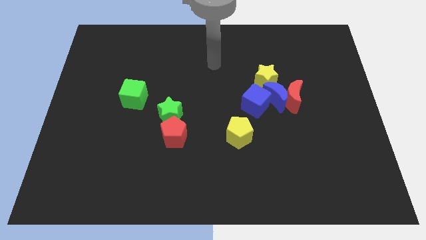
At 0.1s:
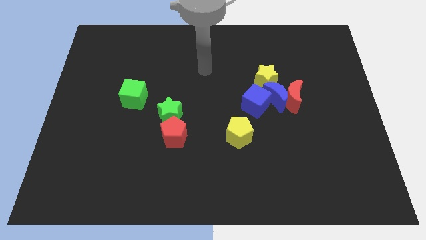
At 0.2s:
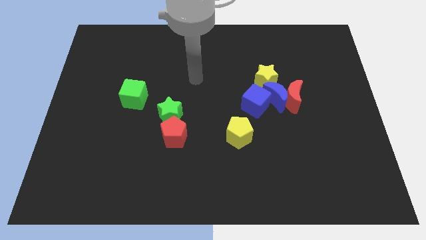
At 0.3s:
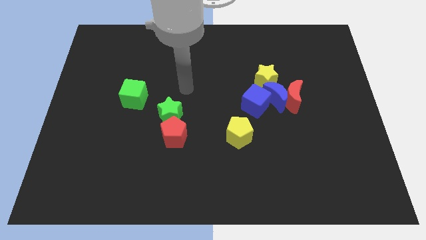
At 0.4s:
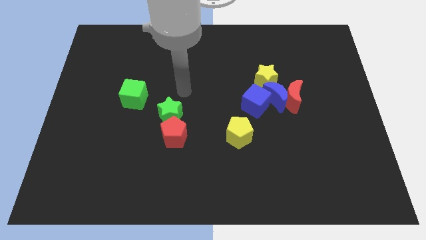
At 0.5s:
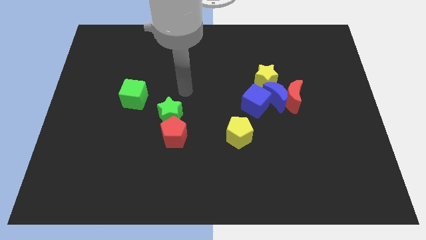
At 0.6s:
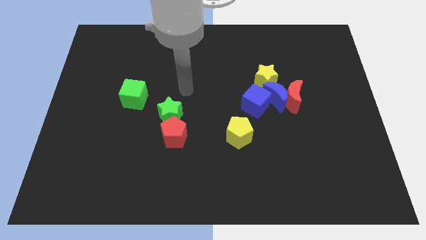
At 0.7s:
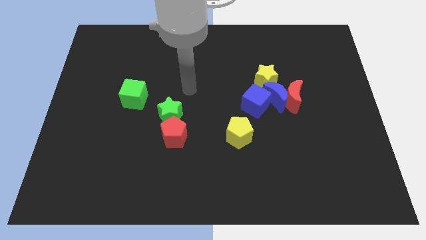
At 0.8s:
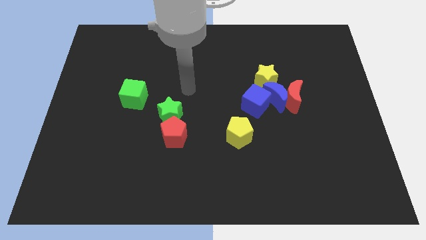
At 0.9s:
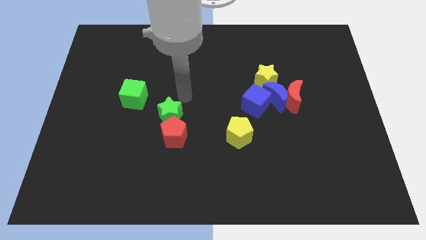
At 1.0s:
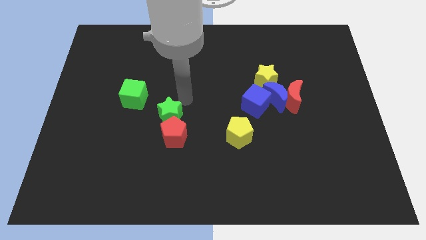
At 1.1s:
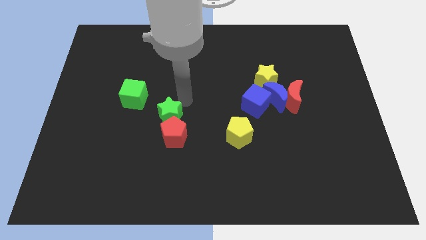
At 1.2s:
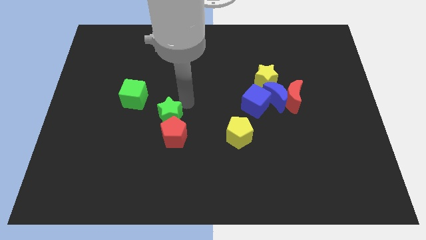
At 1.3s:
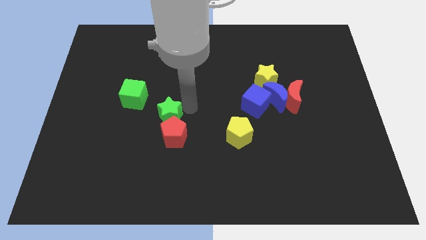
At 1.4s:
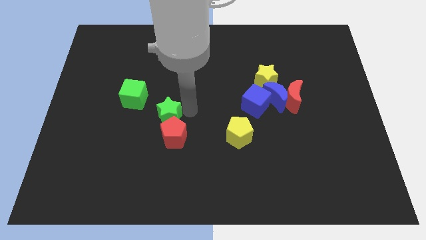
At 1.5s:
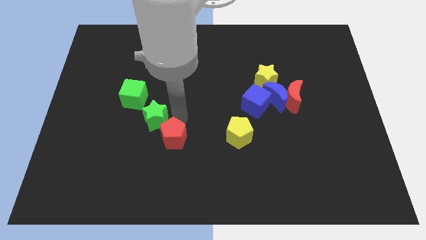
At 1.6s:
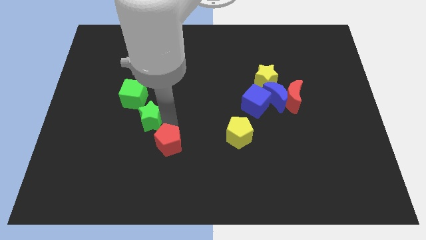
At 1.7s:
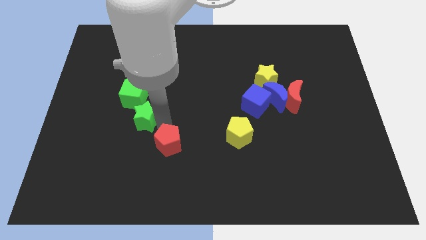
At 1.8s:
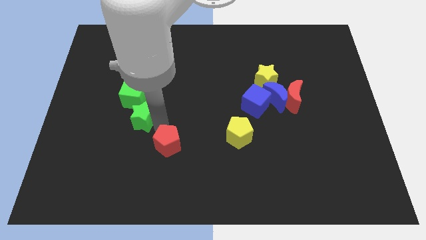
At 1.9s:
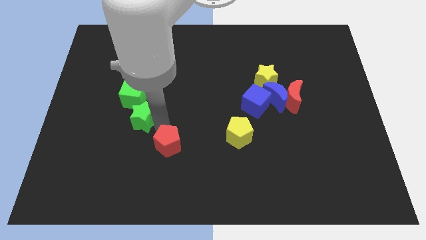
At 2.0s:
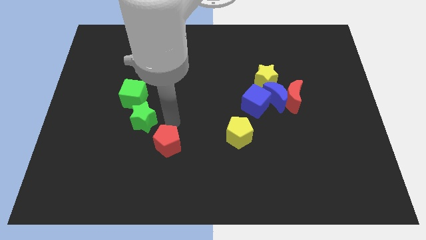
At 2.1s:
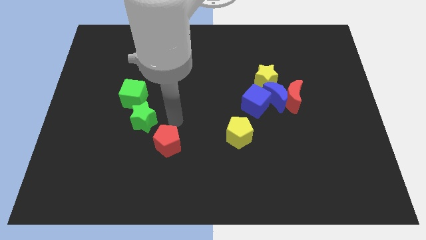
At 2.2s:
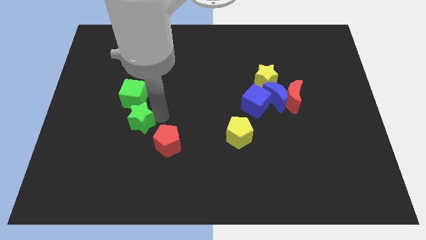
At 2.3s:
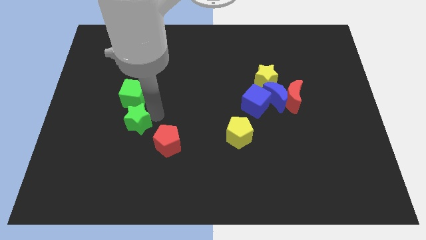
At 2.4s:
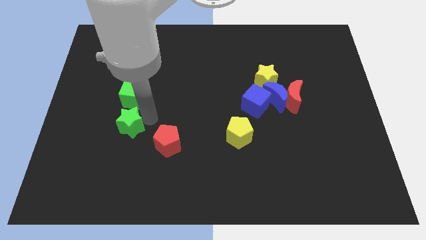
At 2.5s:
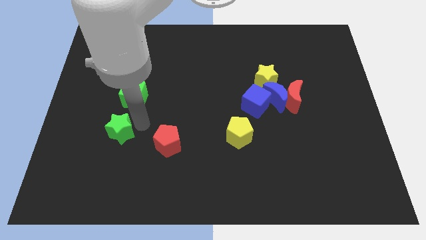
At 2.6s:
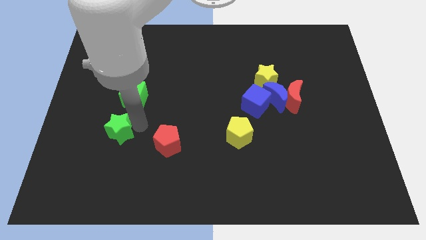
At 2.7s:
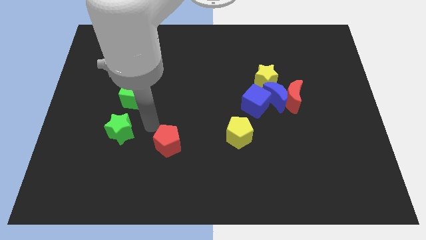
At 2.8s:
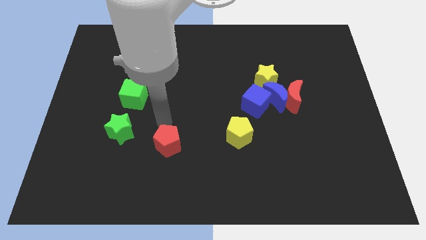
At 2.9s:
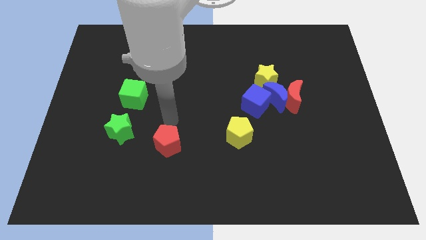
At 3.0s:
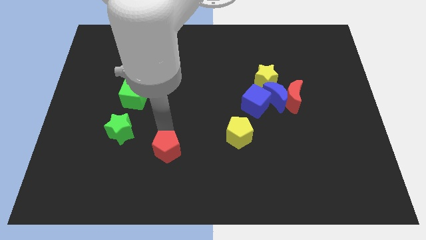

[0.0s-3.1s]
separate the red pentagon and green star

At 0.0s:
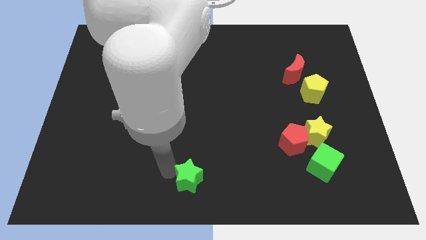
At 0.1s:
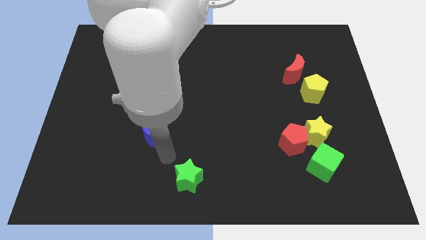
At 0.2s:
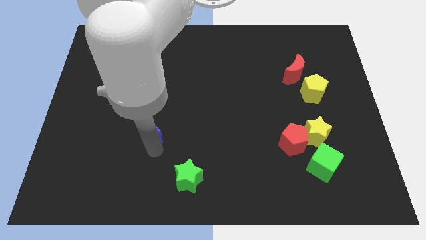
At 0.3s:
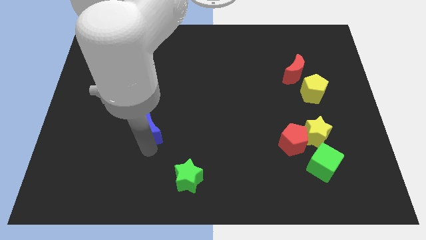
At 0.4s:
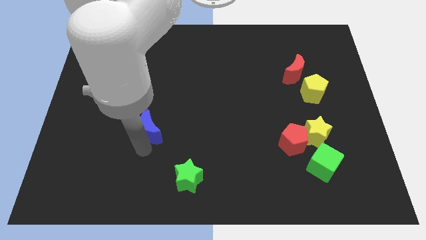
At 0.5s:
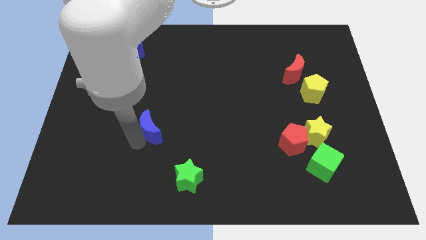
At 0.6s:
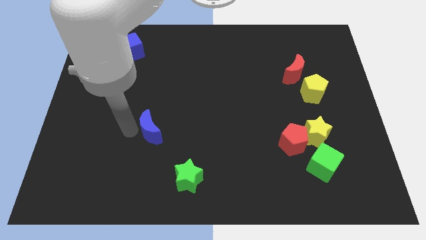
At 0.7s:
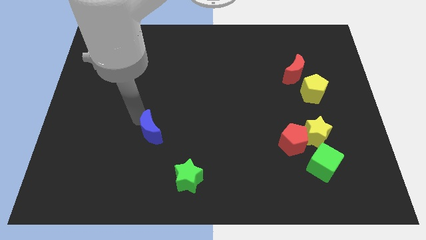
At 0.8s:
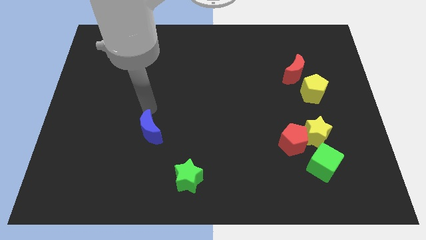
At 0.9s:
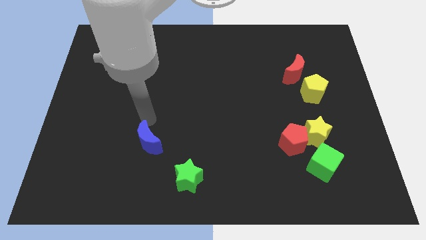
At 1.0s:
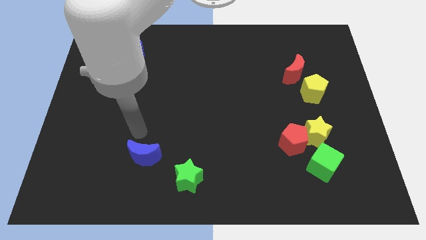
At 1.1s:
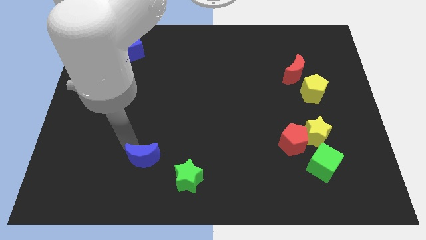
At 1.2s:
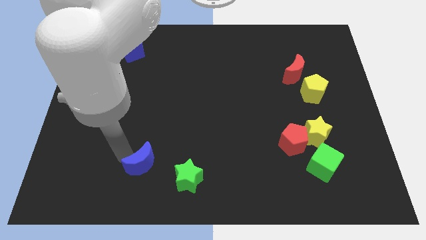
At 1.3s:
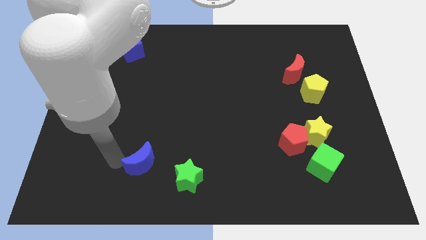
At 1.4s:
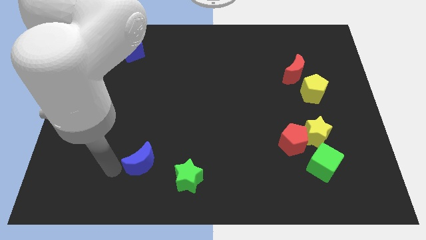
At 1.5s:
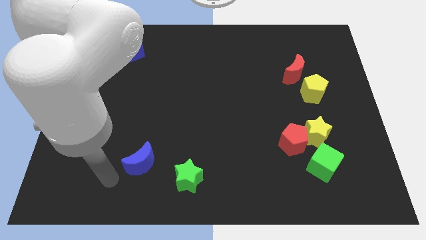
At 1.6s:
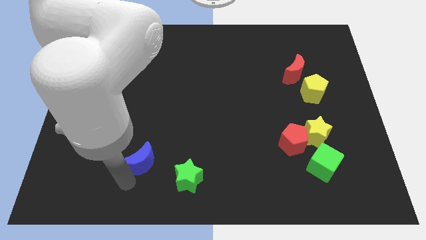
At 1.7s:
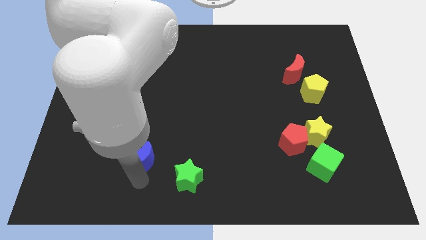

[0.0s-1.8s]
slightly push the blue moon downwards

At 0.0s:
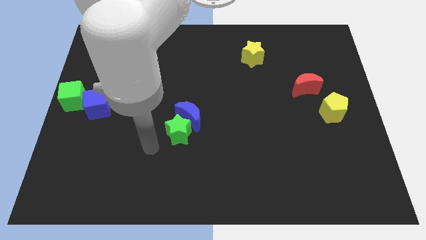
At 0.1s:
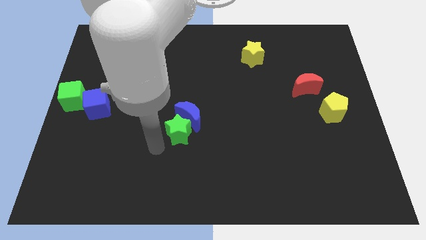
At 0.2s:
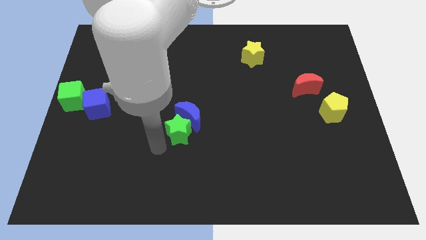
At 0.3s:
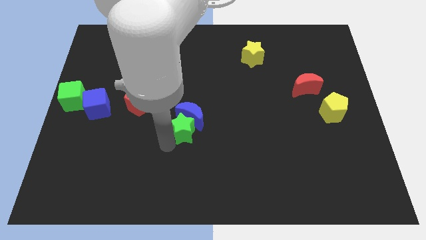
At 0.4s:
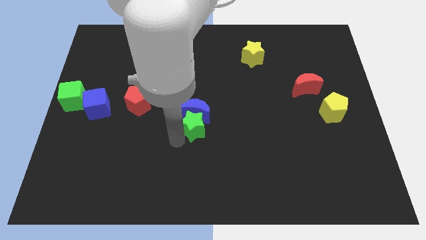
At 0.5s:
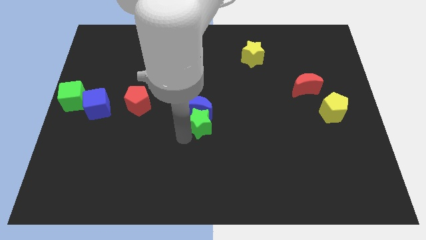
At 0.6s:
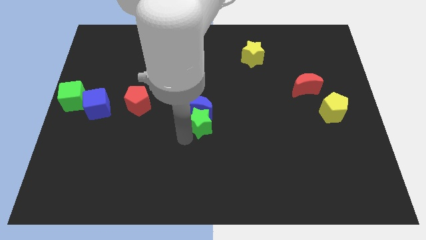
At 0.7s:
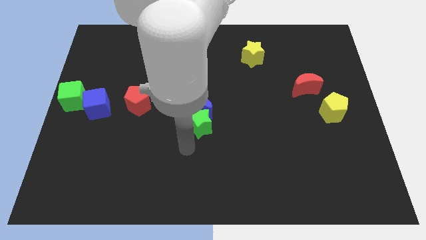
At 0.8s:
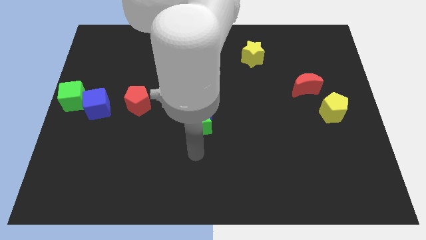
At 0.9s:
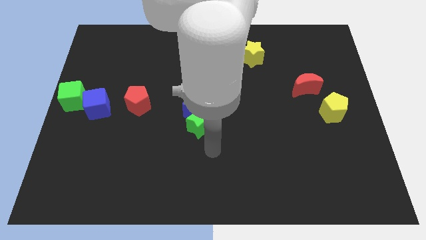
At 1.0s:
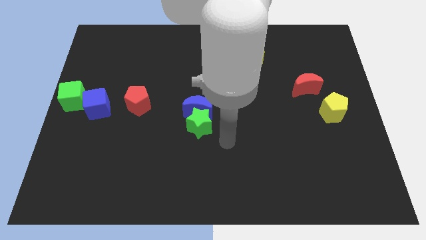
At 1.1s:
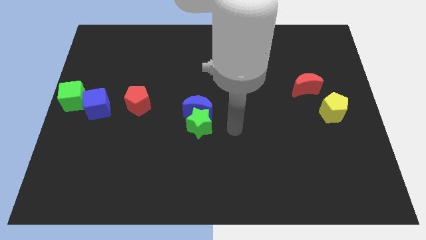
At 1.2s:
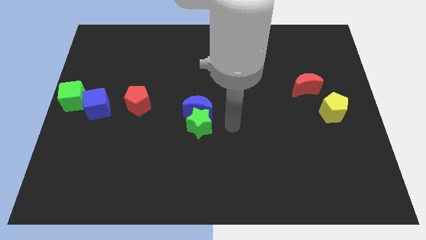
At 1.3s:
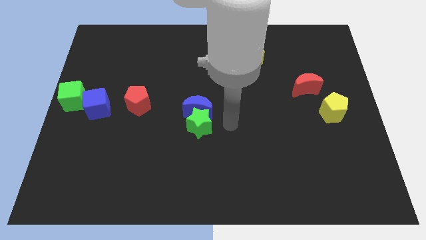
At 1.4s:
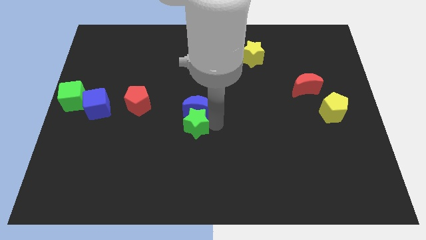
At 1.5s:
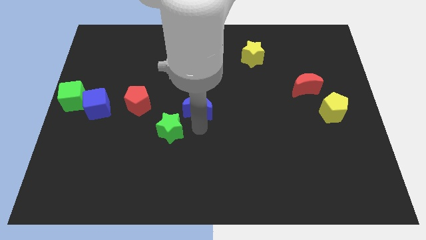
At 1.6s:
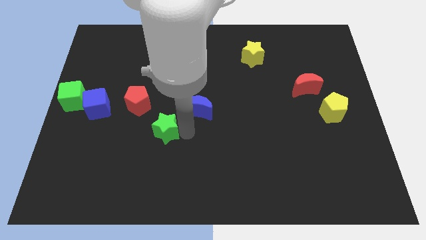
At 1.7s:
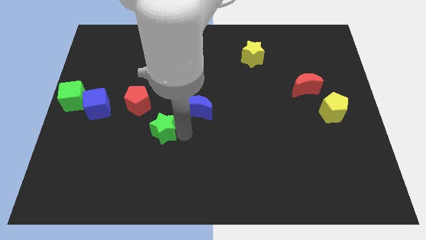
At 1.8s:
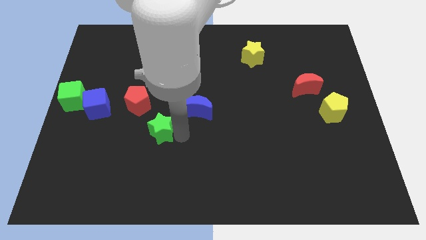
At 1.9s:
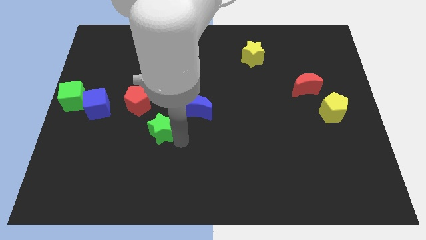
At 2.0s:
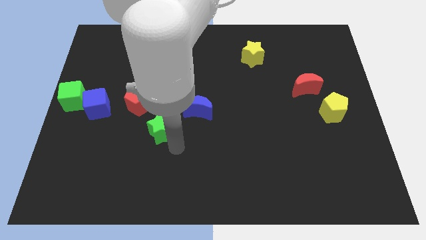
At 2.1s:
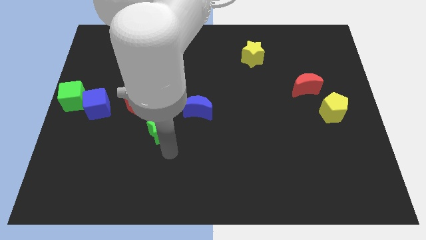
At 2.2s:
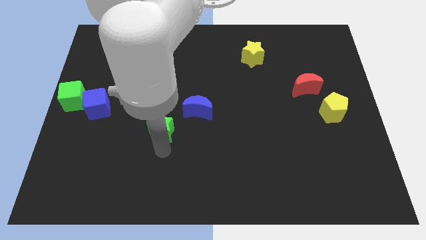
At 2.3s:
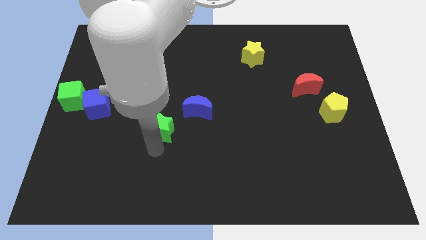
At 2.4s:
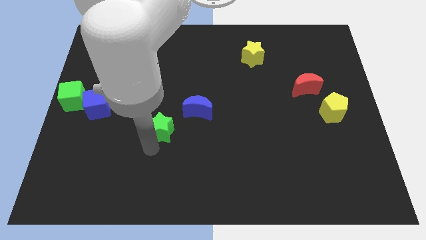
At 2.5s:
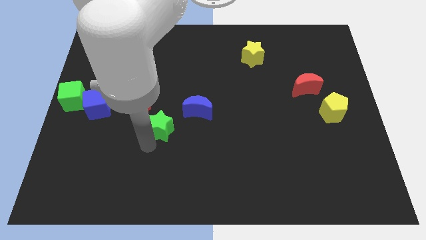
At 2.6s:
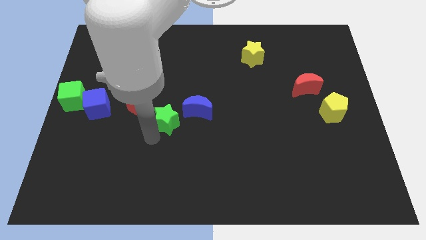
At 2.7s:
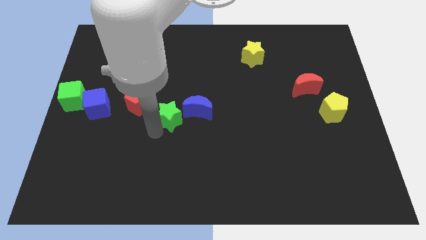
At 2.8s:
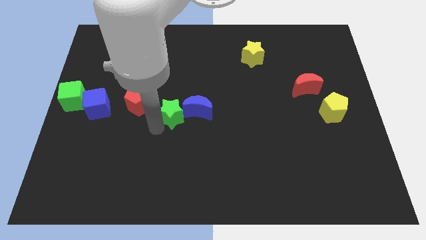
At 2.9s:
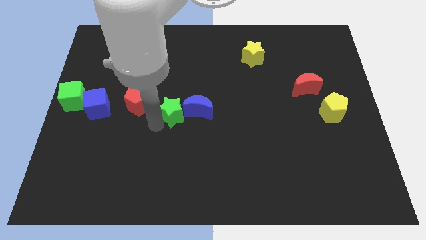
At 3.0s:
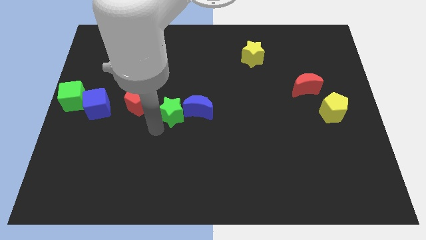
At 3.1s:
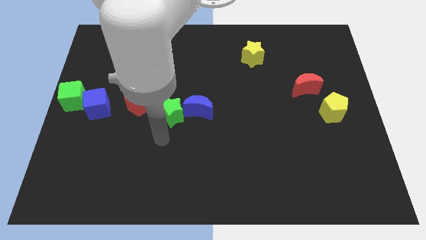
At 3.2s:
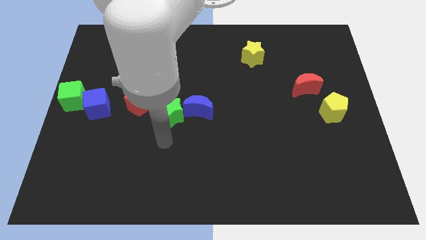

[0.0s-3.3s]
put the green star at the left of the blue moon

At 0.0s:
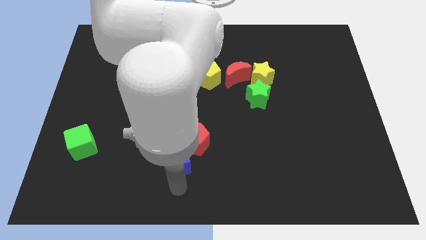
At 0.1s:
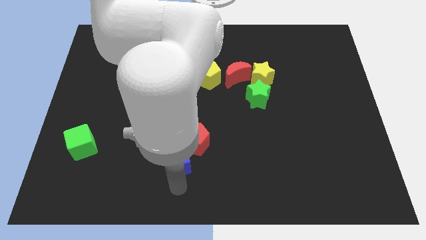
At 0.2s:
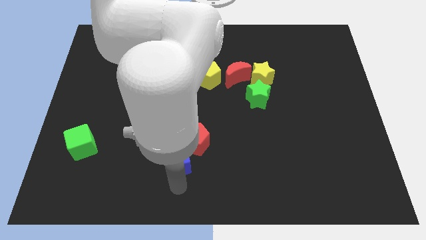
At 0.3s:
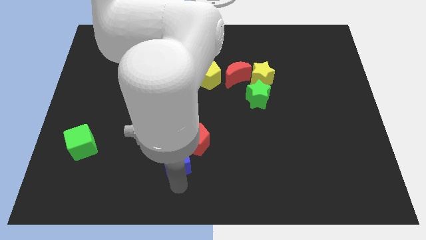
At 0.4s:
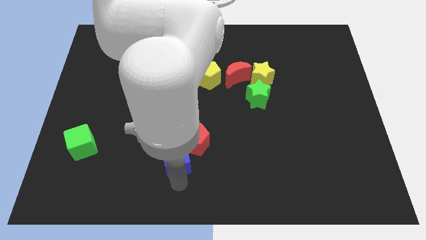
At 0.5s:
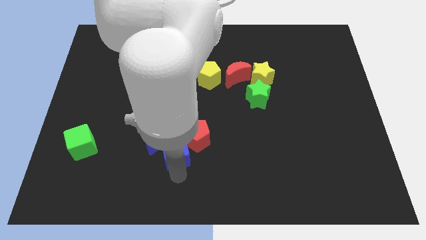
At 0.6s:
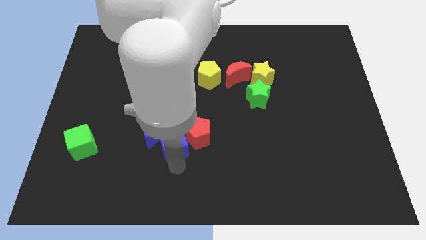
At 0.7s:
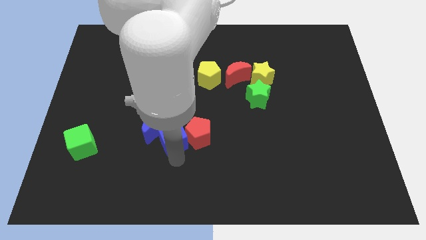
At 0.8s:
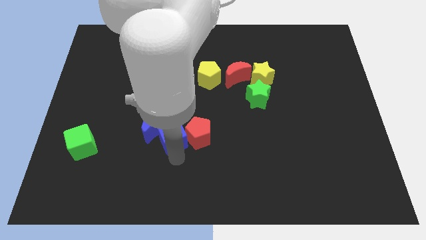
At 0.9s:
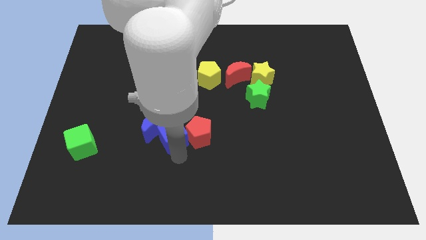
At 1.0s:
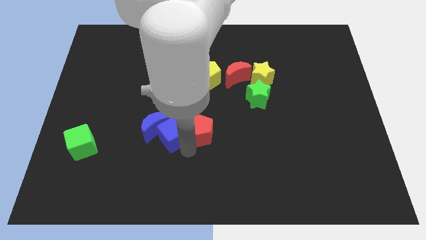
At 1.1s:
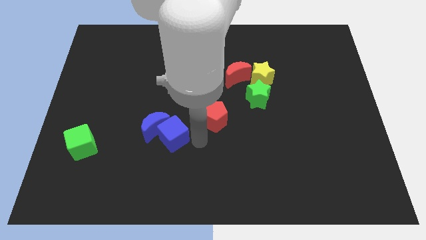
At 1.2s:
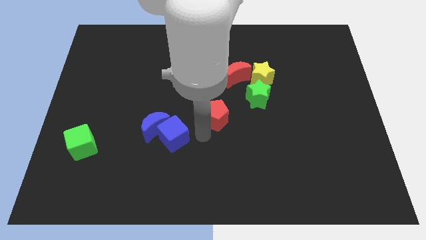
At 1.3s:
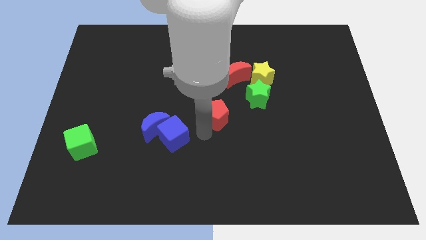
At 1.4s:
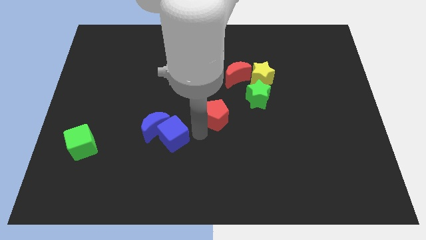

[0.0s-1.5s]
push the blue cube into the blue moon
